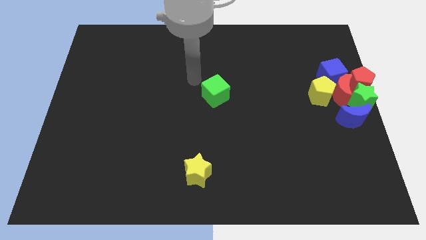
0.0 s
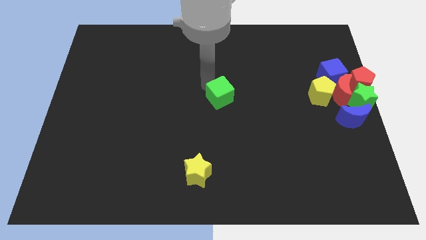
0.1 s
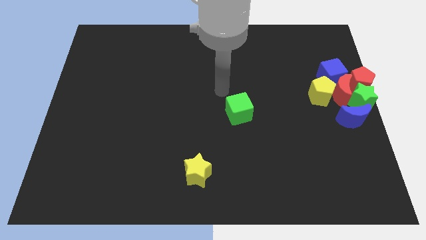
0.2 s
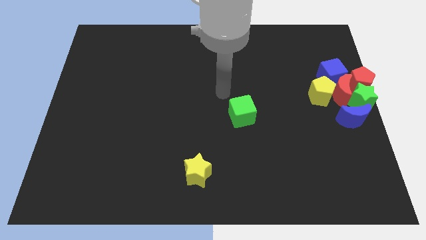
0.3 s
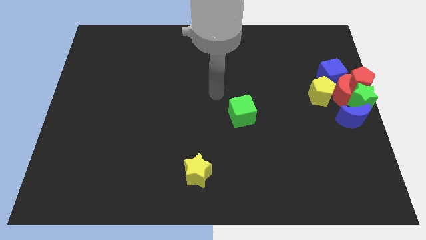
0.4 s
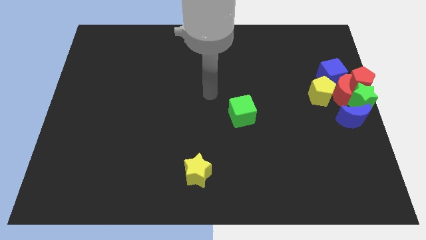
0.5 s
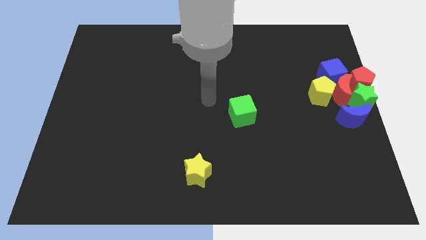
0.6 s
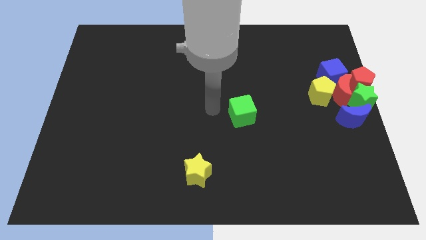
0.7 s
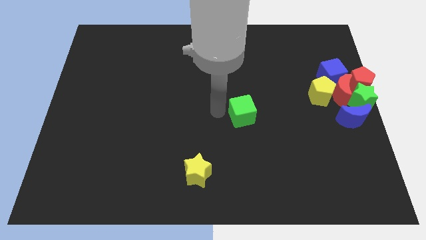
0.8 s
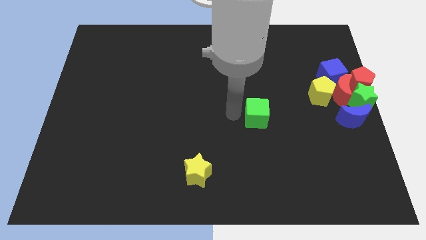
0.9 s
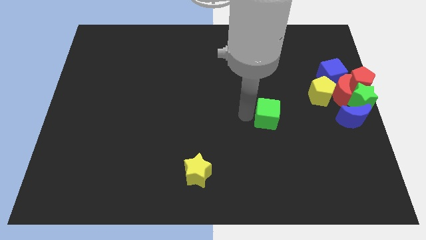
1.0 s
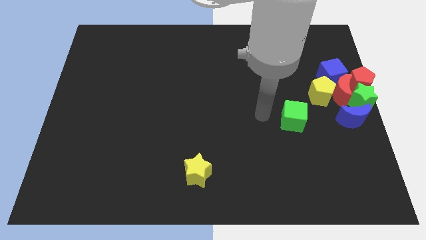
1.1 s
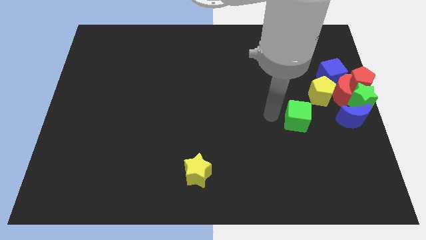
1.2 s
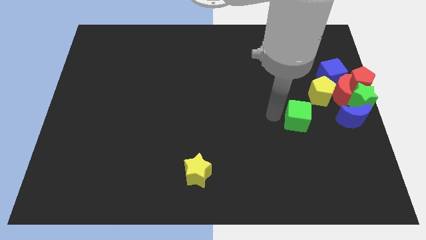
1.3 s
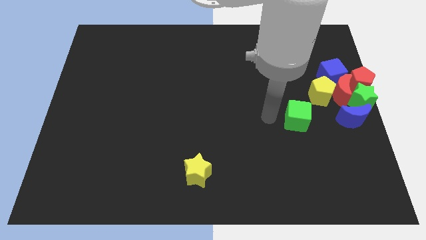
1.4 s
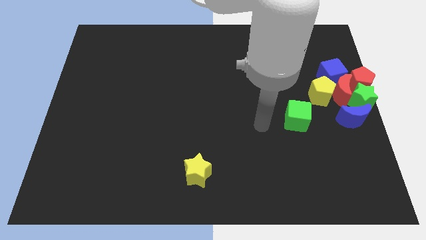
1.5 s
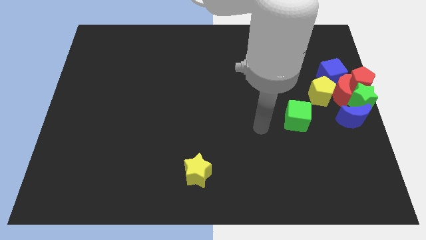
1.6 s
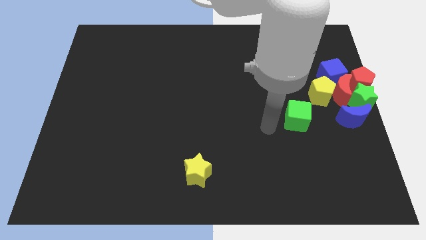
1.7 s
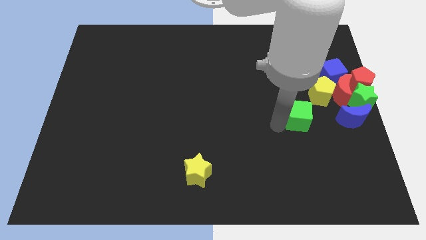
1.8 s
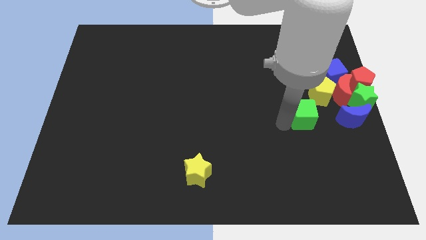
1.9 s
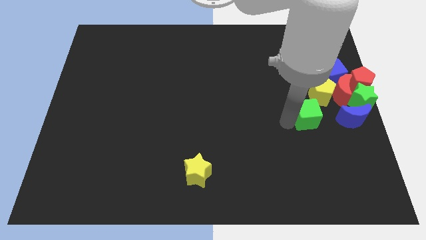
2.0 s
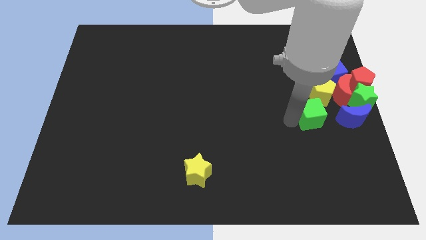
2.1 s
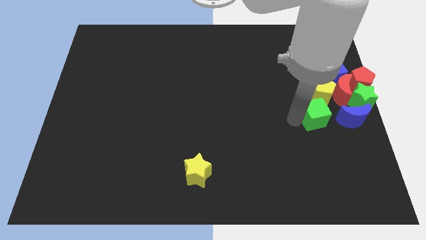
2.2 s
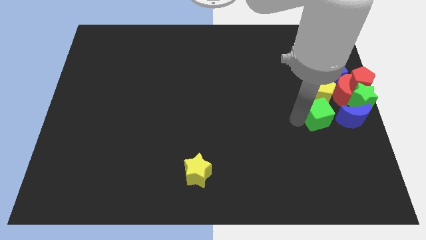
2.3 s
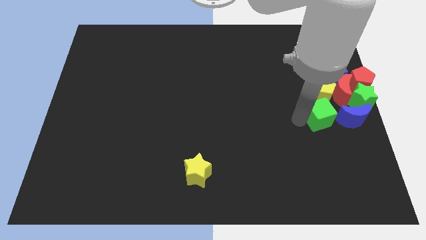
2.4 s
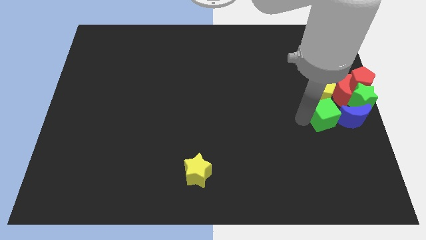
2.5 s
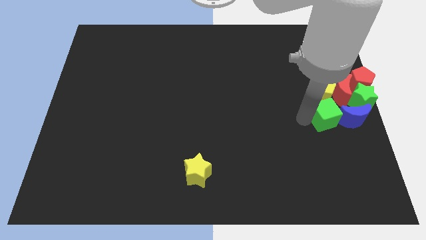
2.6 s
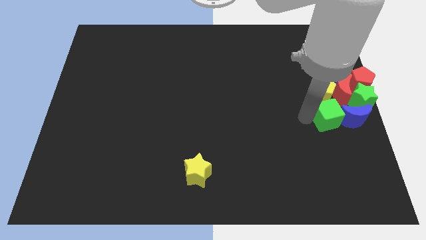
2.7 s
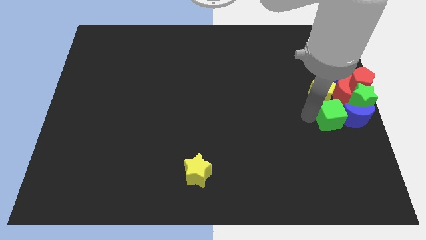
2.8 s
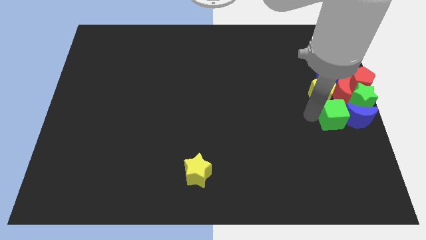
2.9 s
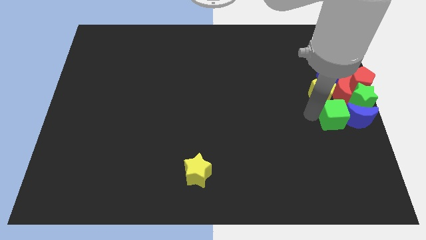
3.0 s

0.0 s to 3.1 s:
slide the green cube into the left side of the blue moon

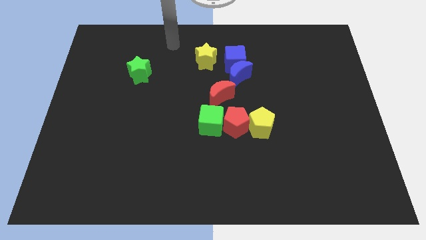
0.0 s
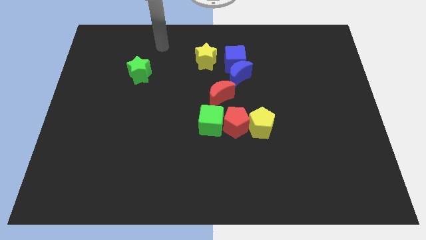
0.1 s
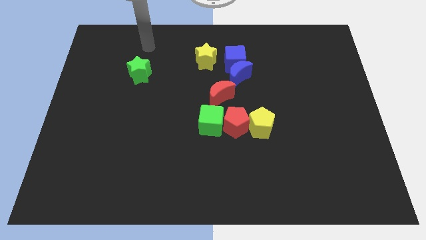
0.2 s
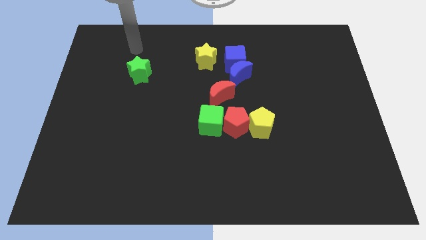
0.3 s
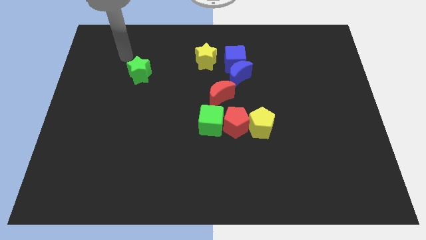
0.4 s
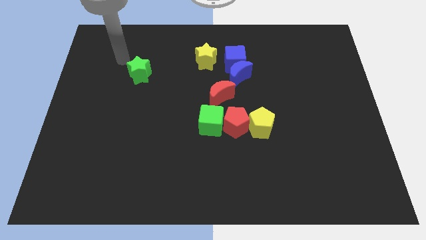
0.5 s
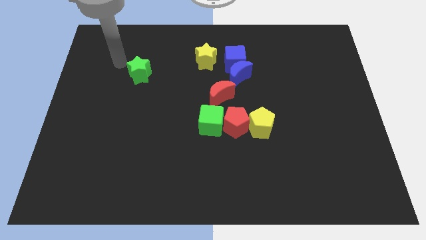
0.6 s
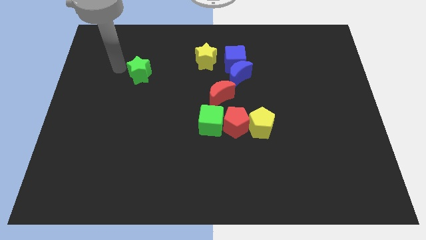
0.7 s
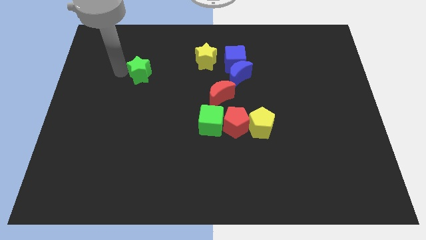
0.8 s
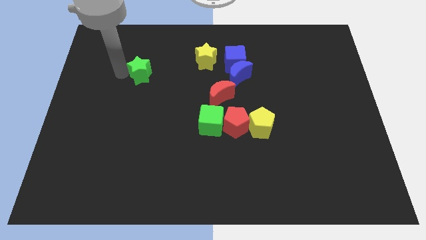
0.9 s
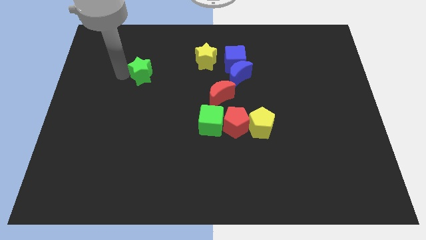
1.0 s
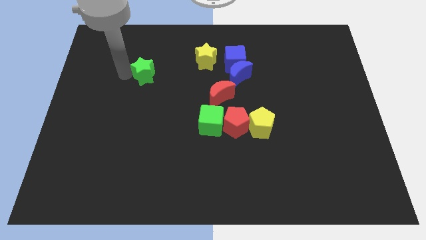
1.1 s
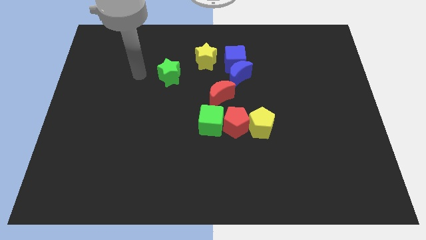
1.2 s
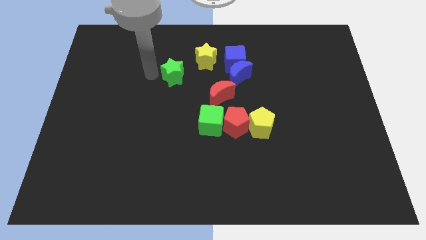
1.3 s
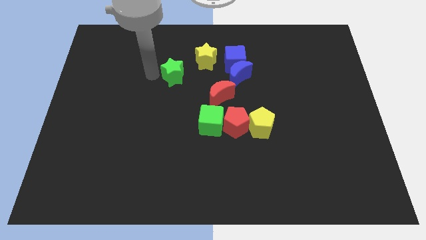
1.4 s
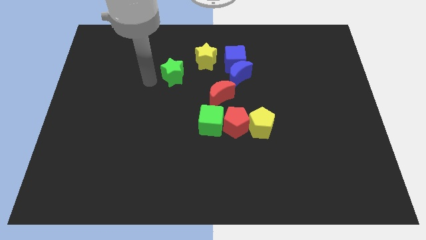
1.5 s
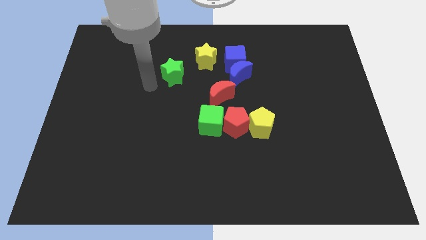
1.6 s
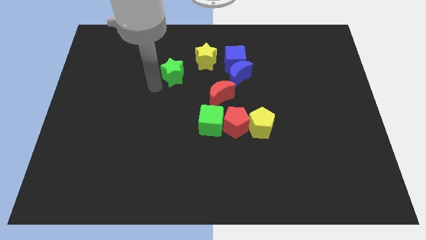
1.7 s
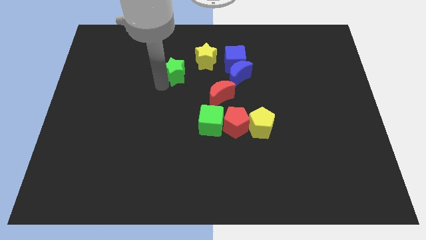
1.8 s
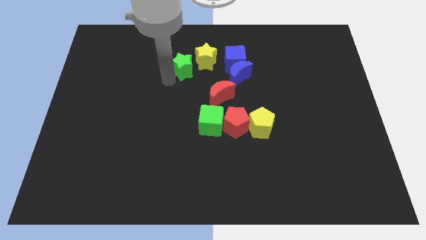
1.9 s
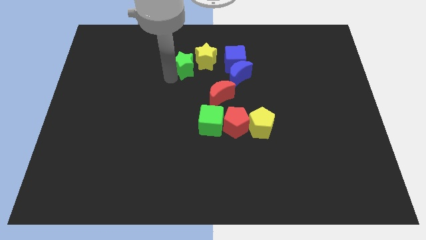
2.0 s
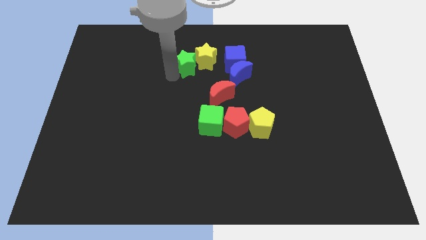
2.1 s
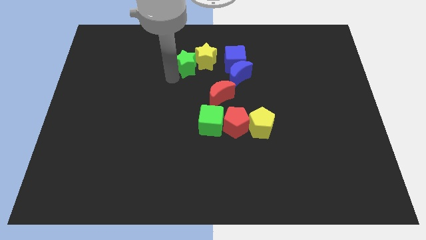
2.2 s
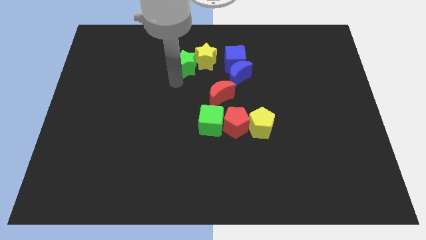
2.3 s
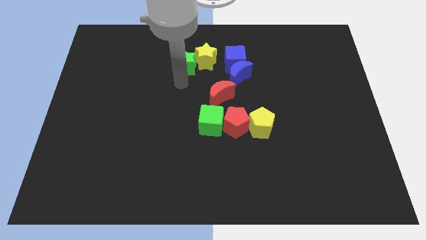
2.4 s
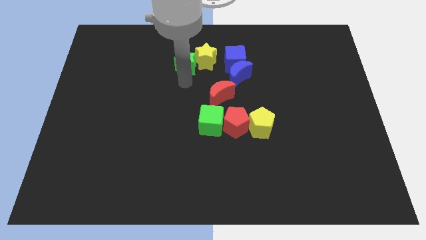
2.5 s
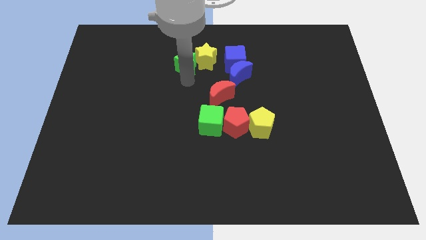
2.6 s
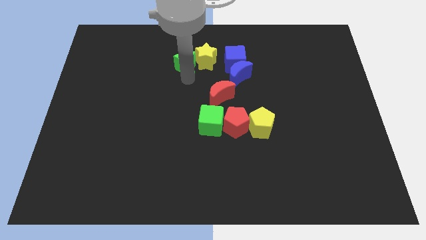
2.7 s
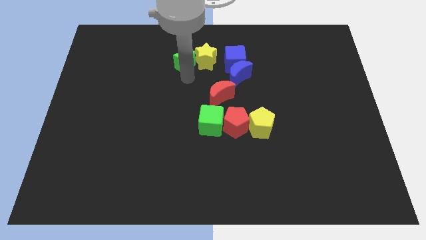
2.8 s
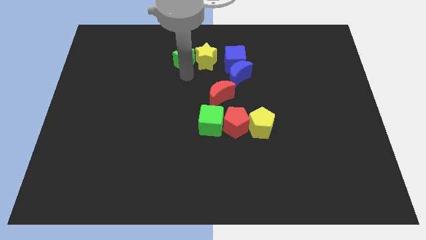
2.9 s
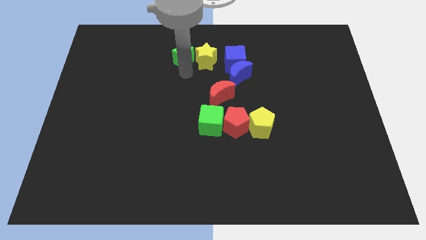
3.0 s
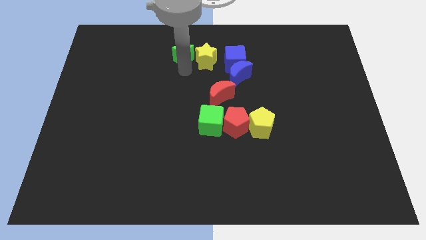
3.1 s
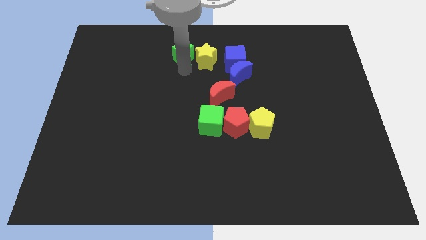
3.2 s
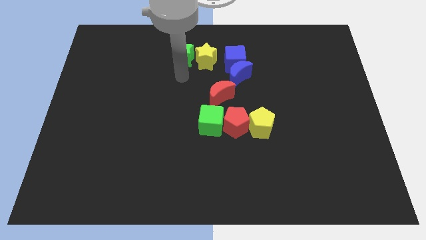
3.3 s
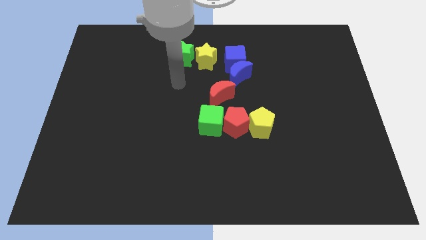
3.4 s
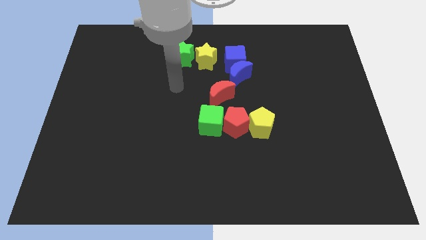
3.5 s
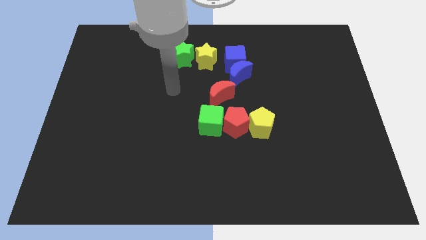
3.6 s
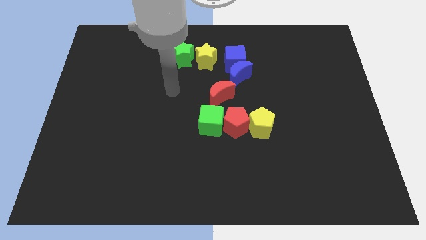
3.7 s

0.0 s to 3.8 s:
place the green star to the left of the yellow star

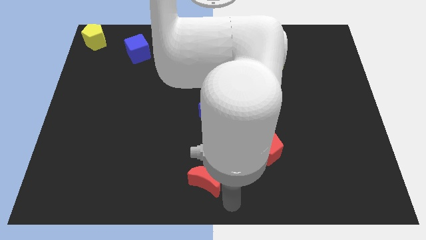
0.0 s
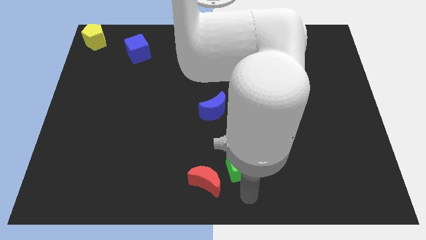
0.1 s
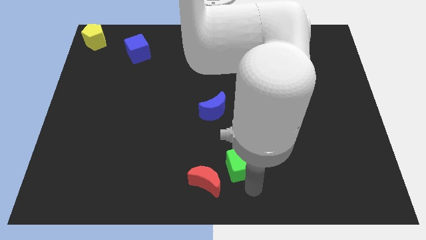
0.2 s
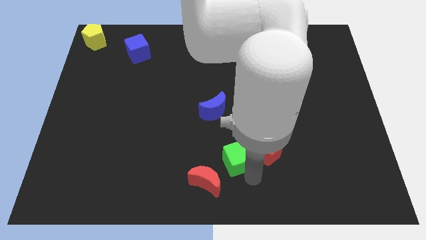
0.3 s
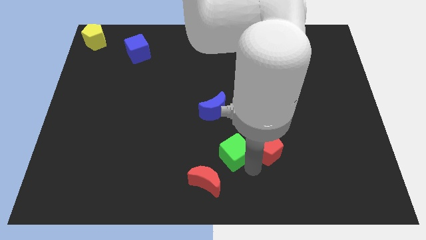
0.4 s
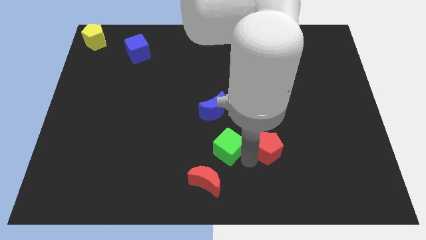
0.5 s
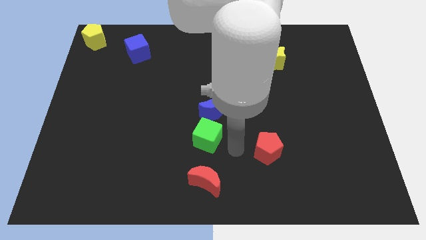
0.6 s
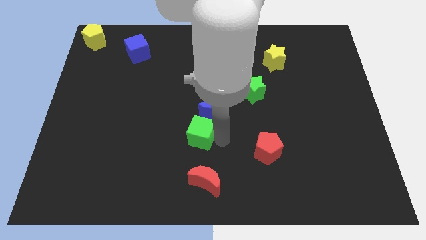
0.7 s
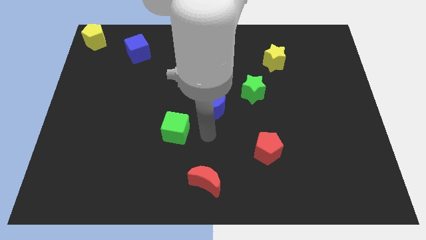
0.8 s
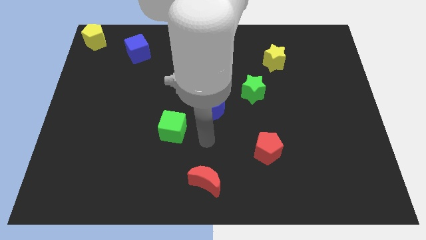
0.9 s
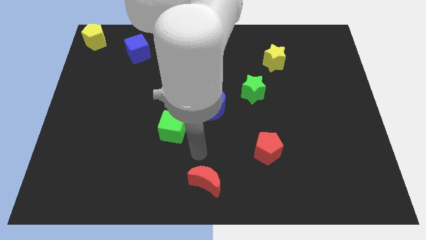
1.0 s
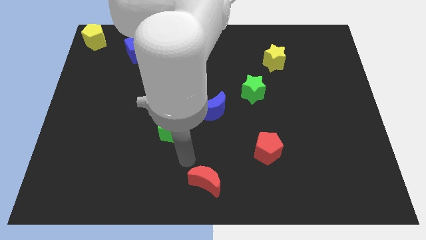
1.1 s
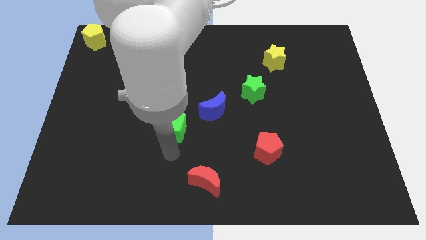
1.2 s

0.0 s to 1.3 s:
place the green cube diagonal to the blue crescent

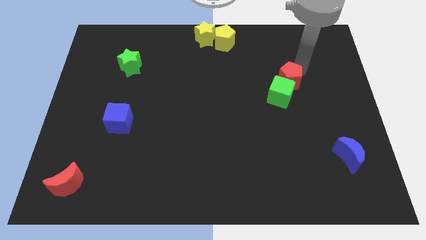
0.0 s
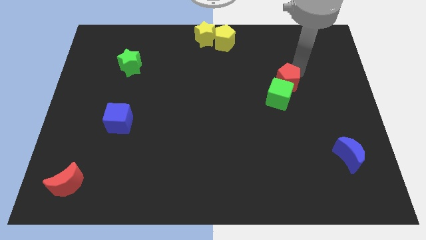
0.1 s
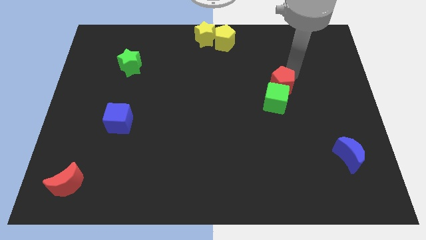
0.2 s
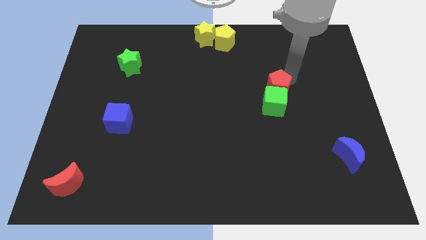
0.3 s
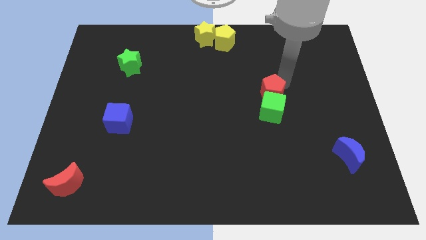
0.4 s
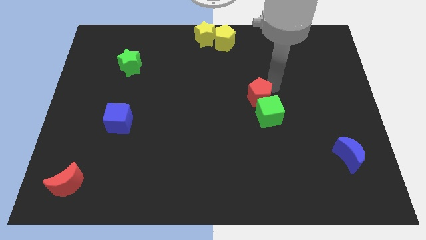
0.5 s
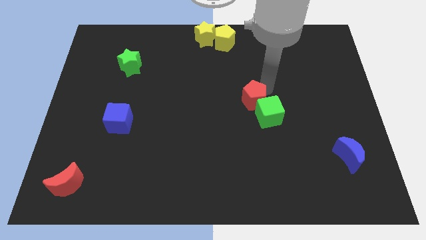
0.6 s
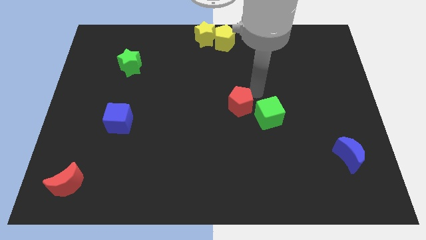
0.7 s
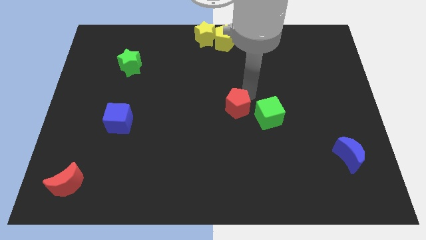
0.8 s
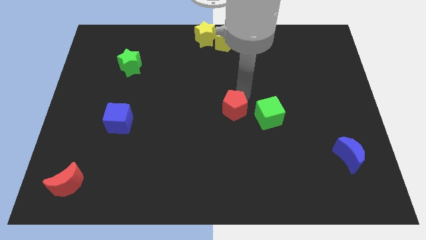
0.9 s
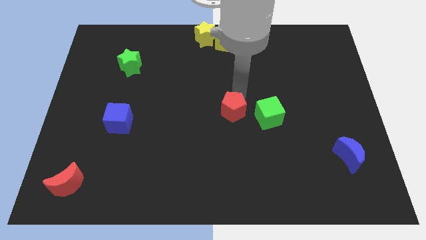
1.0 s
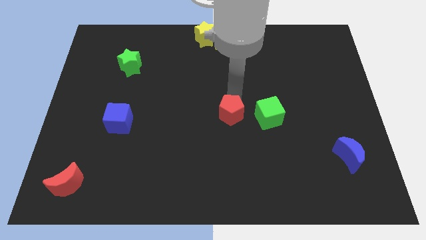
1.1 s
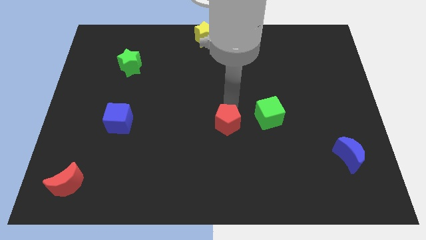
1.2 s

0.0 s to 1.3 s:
place red pentagon to the left of the green cube
